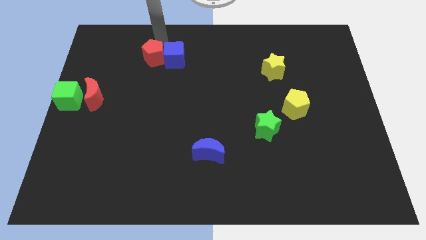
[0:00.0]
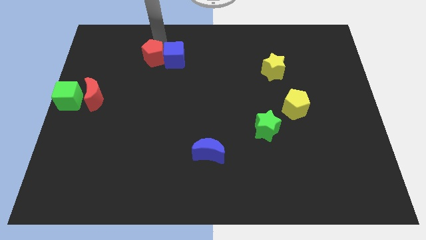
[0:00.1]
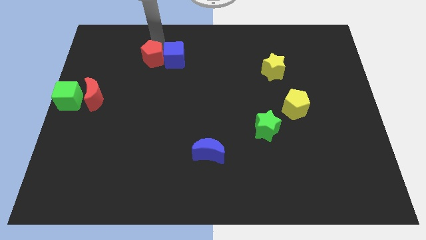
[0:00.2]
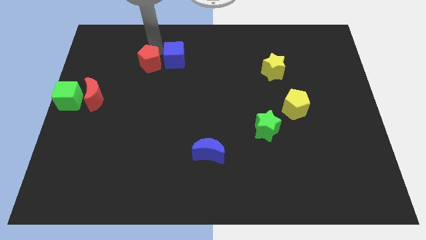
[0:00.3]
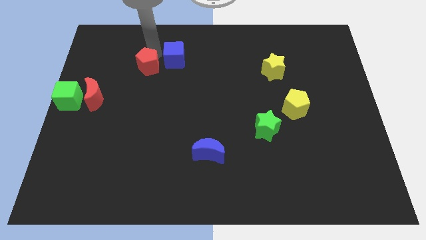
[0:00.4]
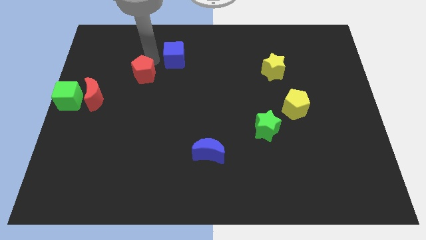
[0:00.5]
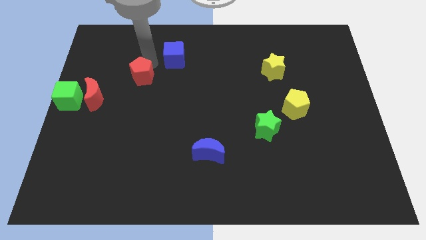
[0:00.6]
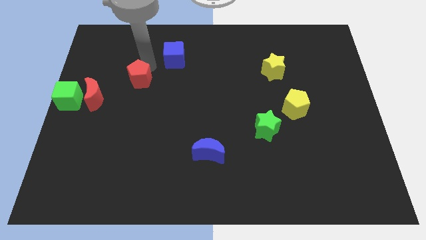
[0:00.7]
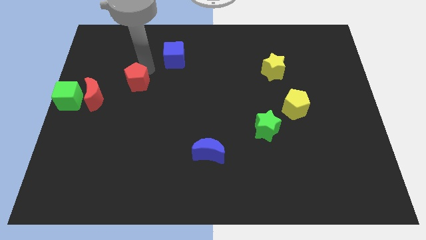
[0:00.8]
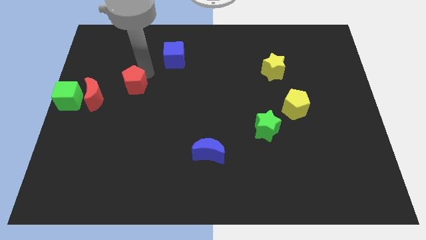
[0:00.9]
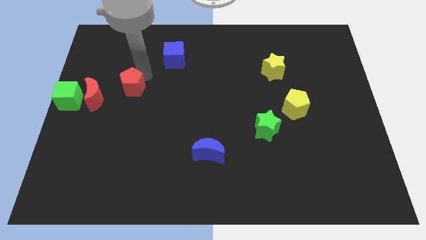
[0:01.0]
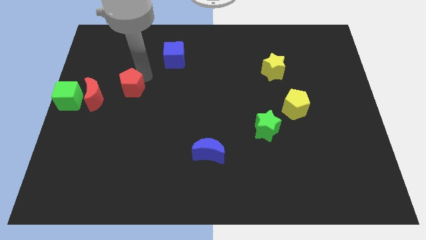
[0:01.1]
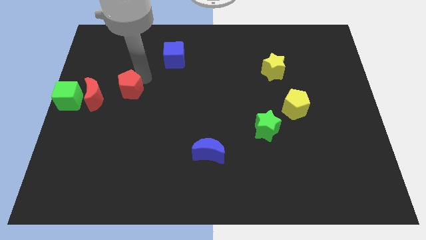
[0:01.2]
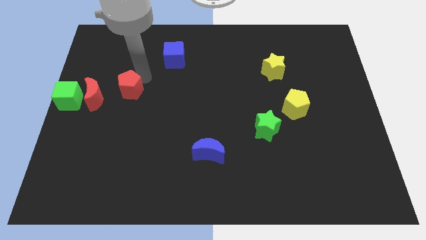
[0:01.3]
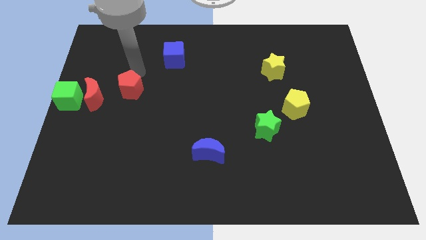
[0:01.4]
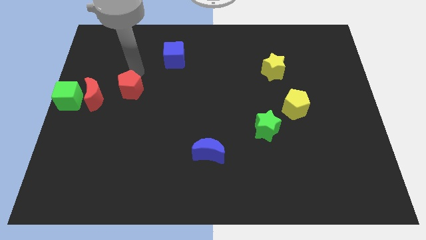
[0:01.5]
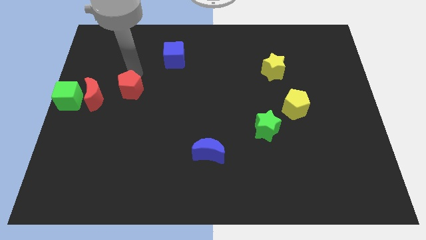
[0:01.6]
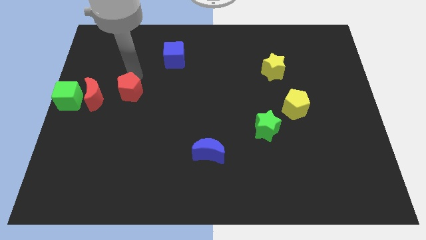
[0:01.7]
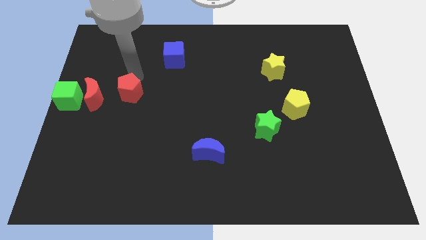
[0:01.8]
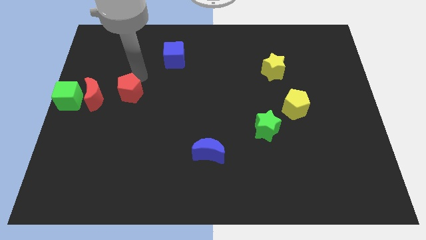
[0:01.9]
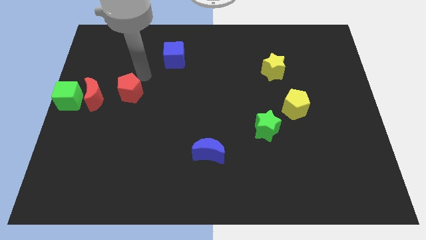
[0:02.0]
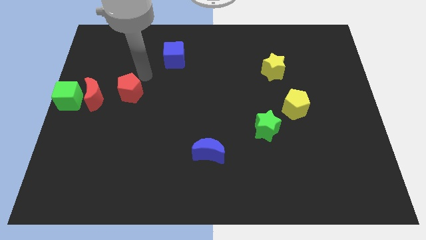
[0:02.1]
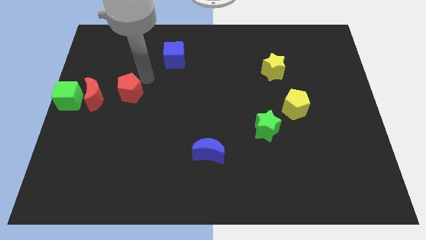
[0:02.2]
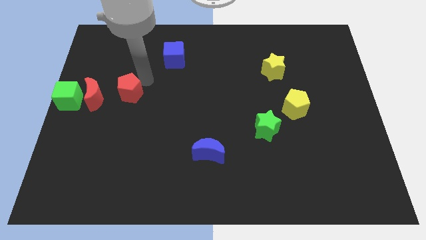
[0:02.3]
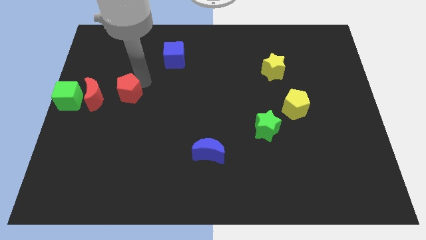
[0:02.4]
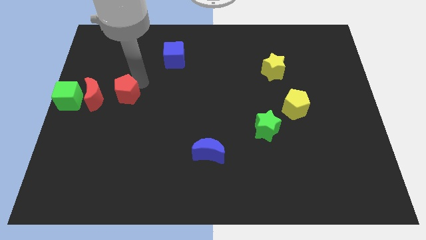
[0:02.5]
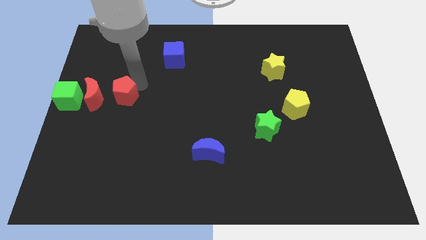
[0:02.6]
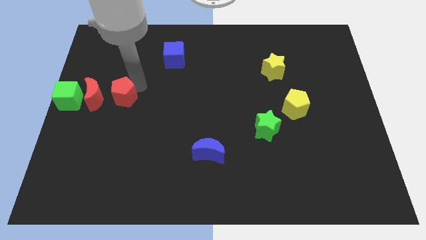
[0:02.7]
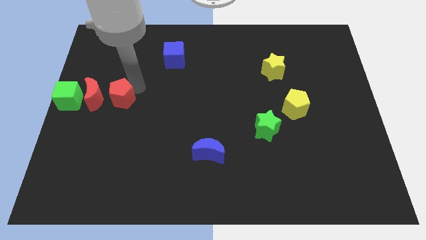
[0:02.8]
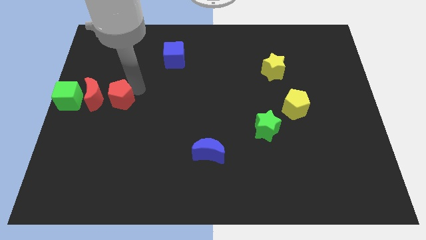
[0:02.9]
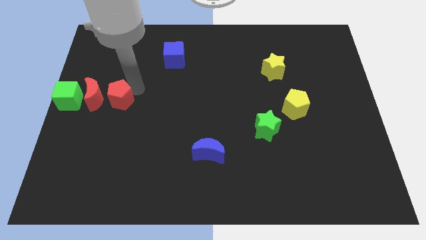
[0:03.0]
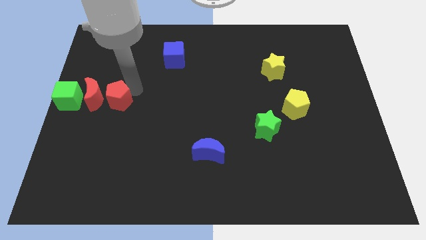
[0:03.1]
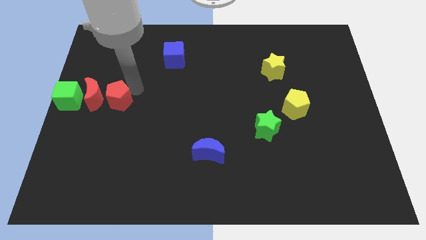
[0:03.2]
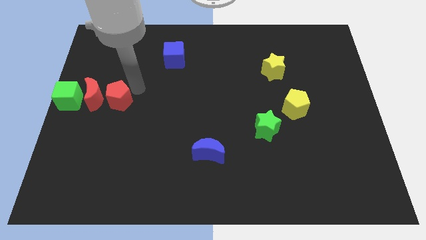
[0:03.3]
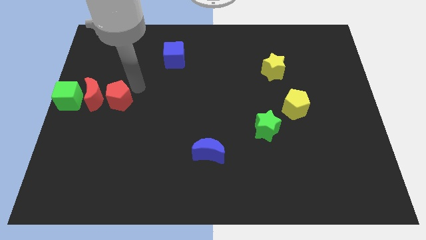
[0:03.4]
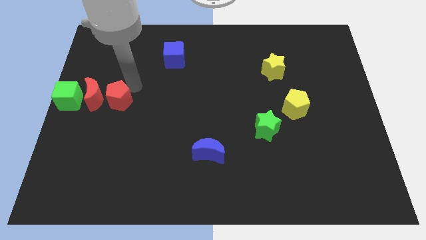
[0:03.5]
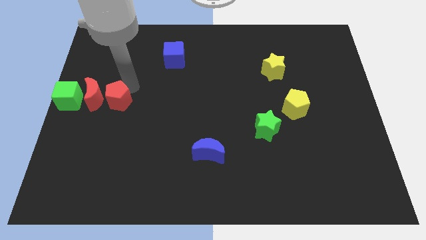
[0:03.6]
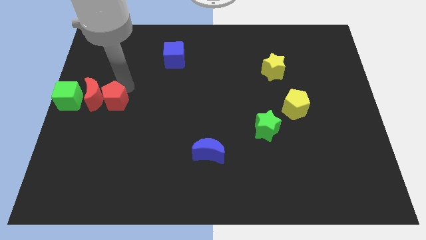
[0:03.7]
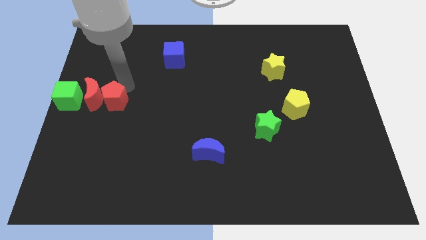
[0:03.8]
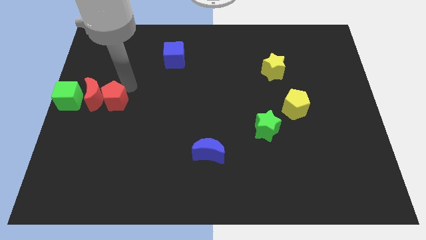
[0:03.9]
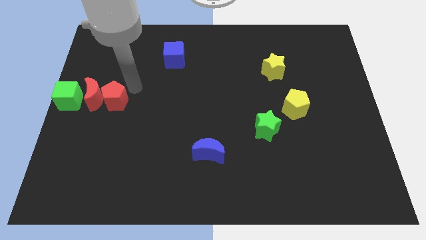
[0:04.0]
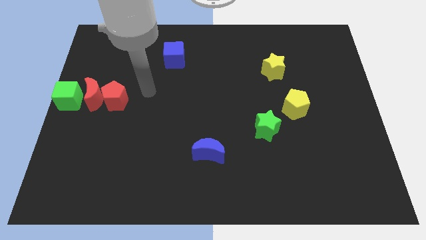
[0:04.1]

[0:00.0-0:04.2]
move the red pentagon to the right beside the red crescent

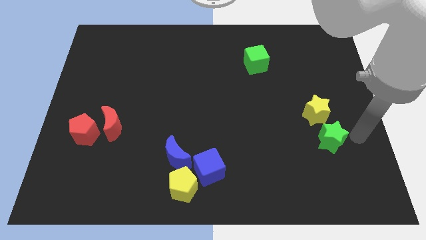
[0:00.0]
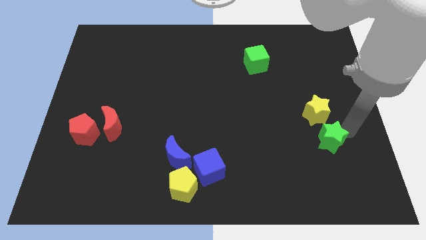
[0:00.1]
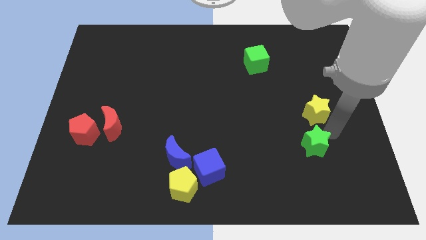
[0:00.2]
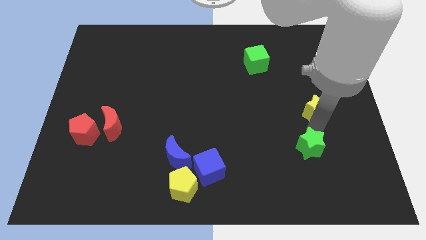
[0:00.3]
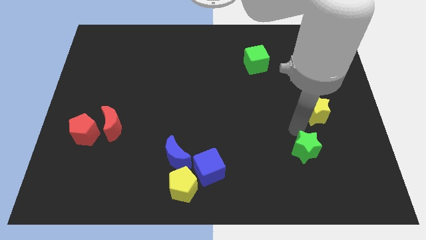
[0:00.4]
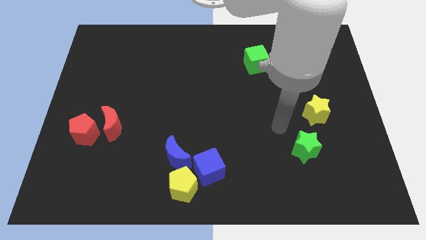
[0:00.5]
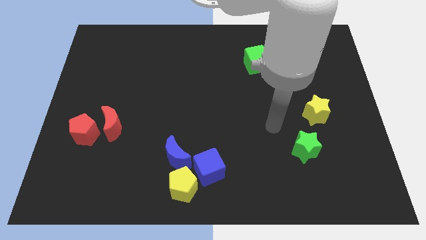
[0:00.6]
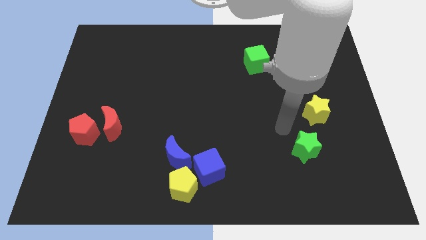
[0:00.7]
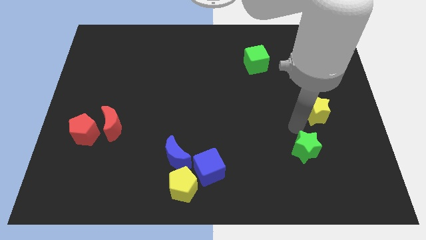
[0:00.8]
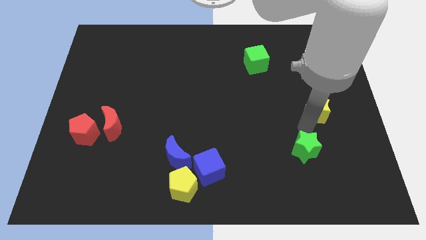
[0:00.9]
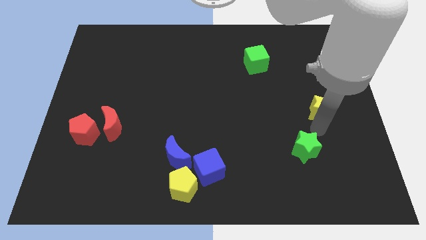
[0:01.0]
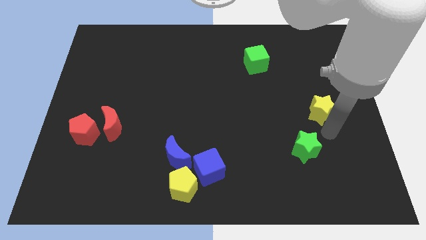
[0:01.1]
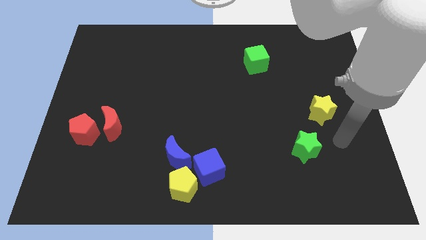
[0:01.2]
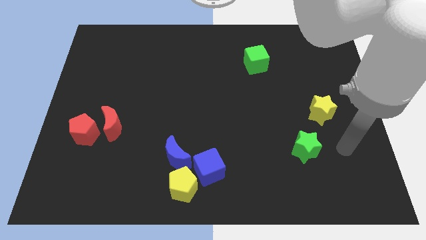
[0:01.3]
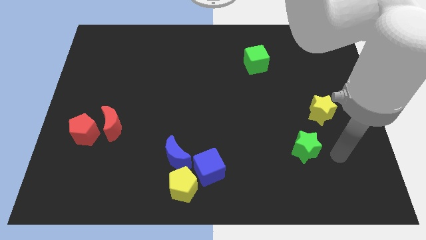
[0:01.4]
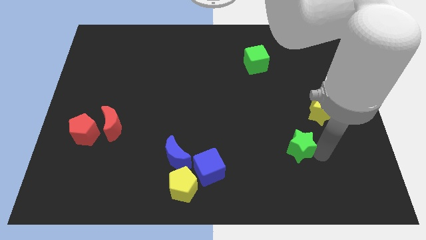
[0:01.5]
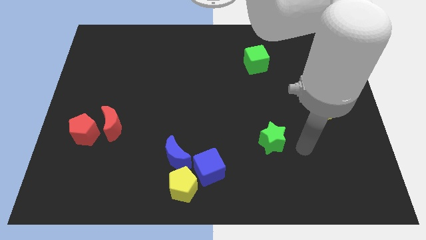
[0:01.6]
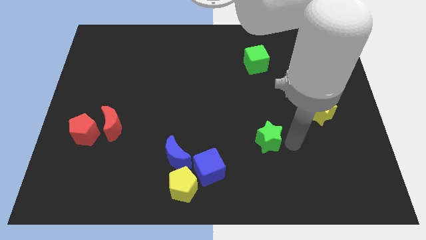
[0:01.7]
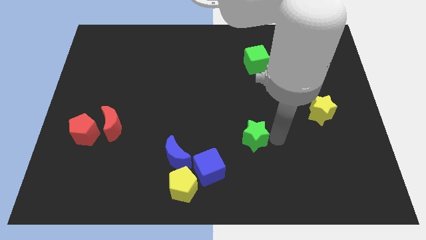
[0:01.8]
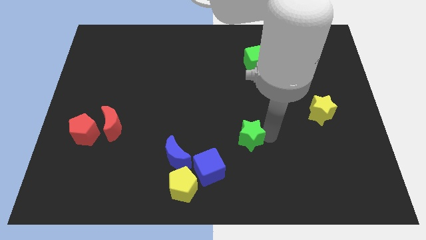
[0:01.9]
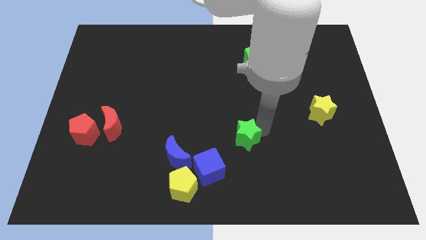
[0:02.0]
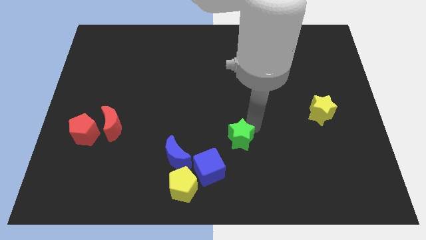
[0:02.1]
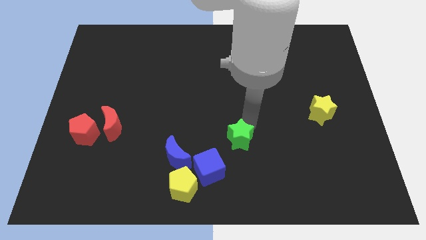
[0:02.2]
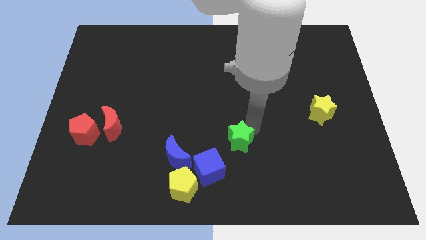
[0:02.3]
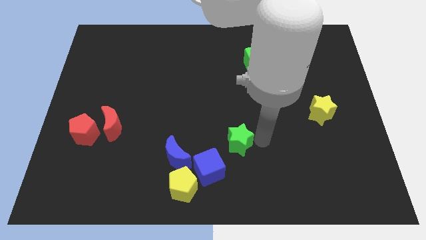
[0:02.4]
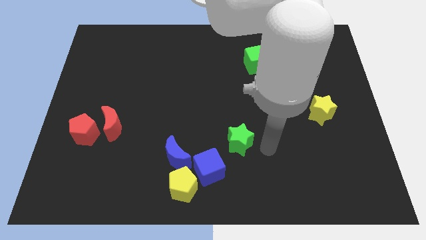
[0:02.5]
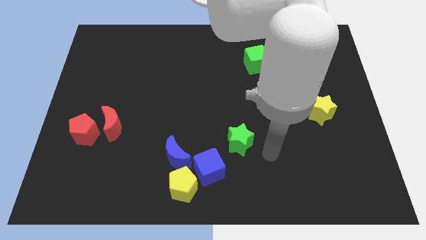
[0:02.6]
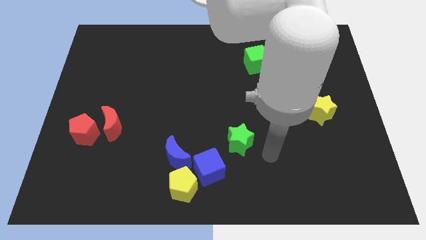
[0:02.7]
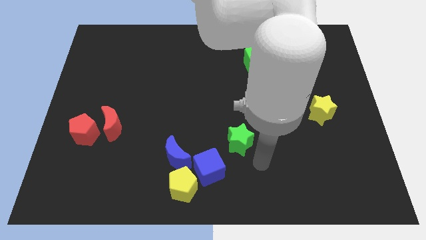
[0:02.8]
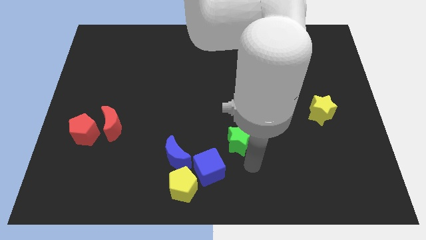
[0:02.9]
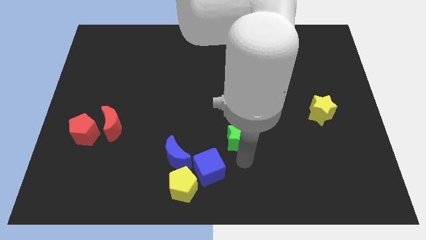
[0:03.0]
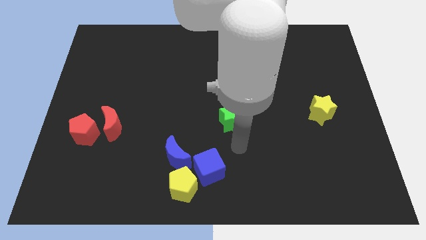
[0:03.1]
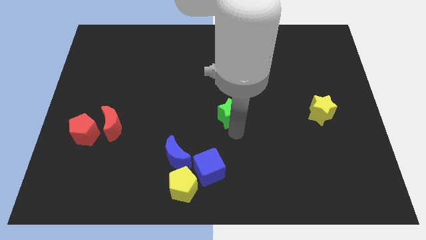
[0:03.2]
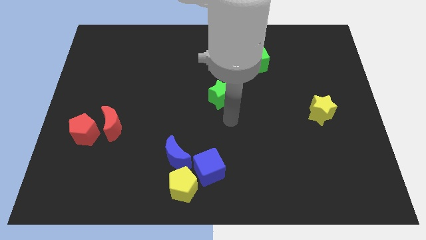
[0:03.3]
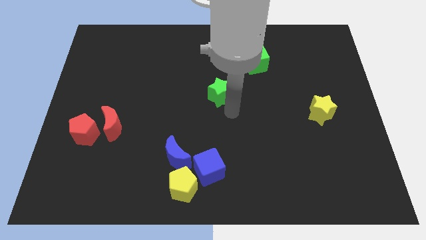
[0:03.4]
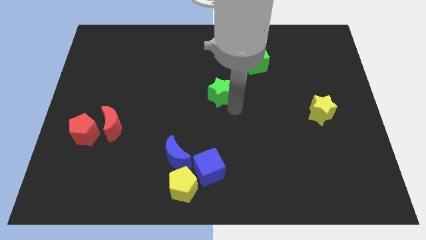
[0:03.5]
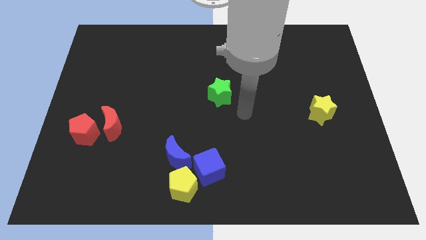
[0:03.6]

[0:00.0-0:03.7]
move the green star to the bottom left of the green cube

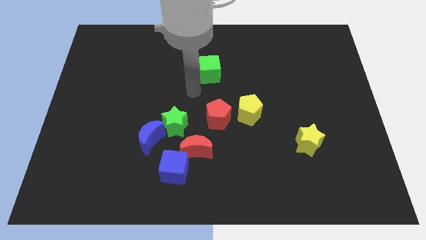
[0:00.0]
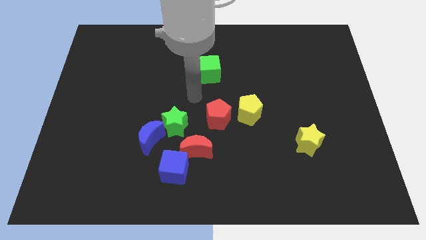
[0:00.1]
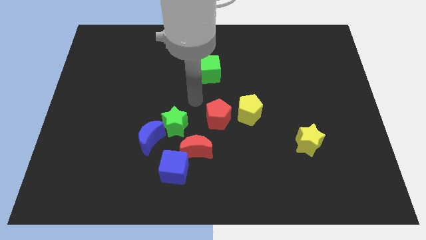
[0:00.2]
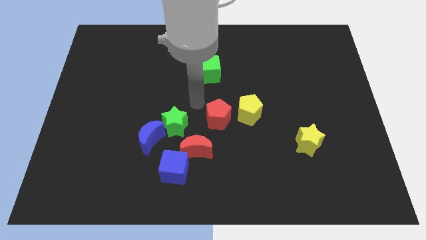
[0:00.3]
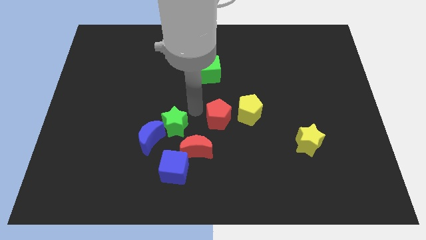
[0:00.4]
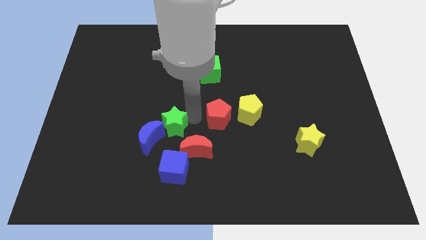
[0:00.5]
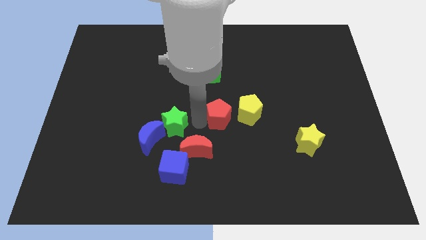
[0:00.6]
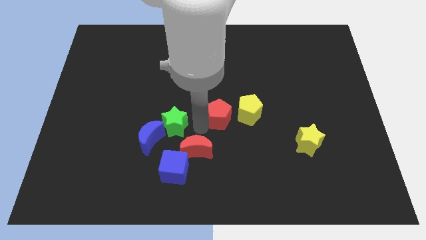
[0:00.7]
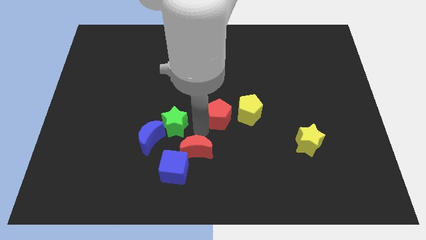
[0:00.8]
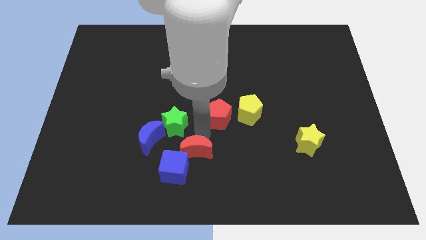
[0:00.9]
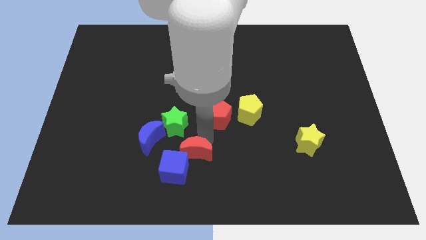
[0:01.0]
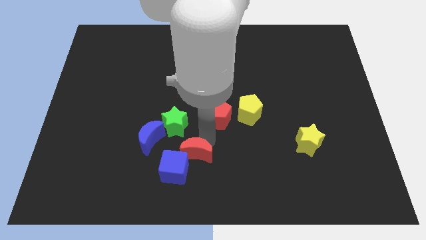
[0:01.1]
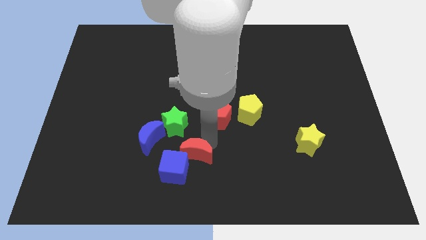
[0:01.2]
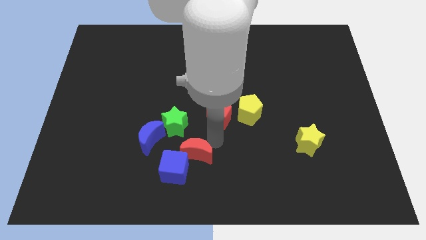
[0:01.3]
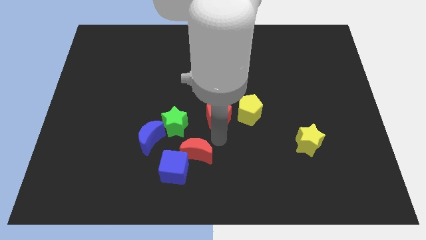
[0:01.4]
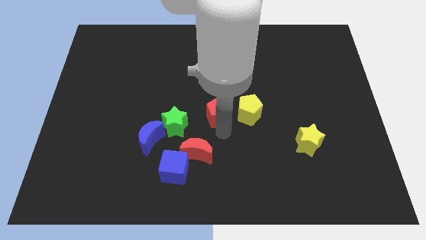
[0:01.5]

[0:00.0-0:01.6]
move your arm to the bottom of the red pentagon
